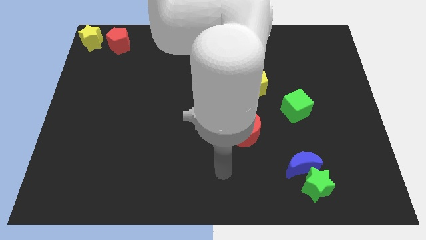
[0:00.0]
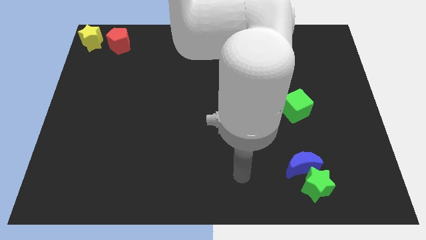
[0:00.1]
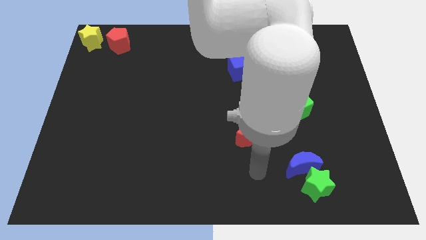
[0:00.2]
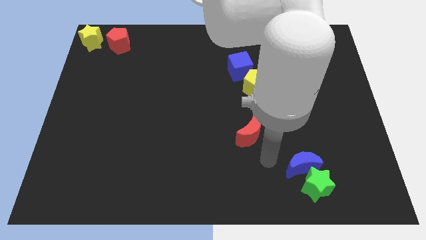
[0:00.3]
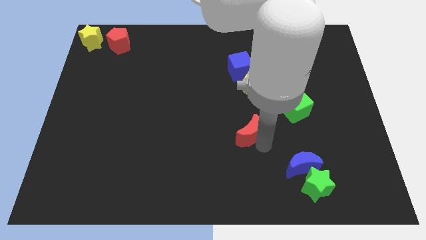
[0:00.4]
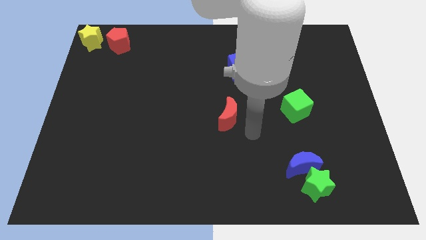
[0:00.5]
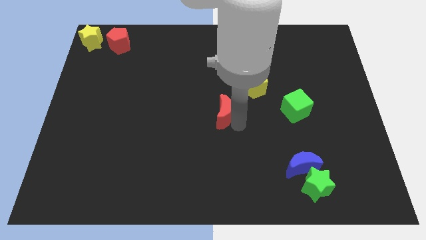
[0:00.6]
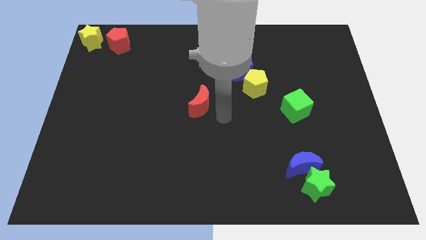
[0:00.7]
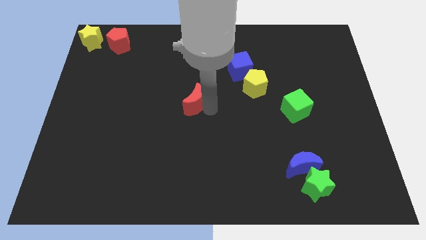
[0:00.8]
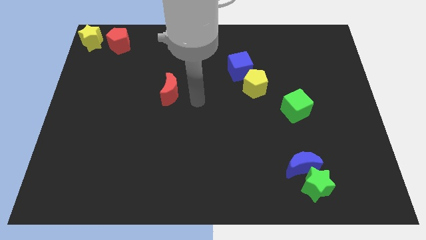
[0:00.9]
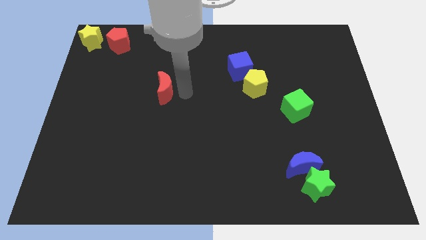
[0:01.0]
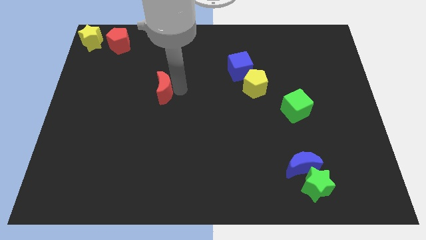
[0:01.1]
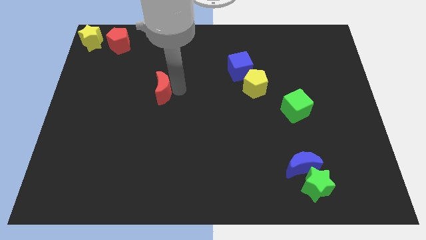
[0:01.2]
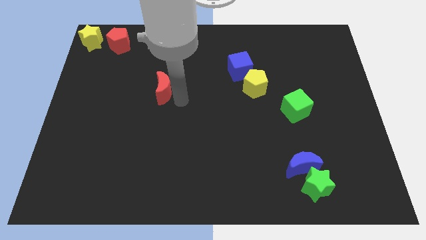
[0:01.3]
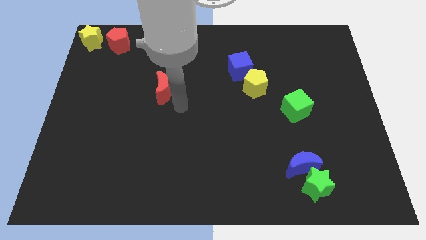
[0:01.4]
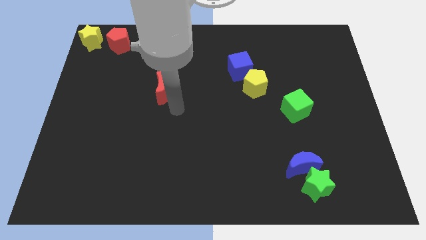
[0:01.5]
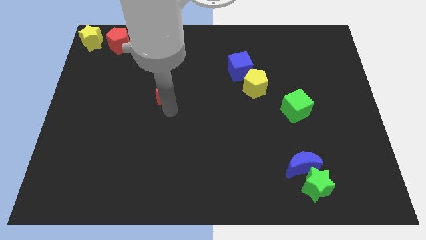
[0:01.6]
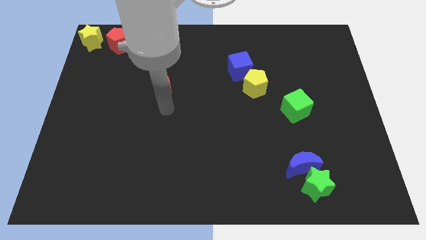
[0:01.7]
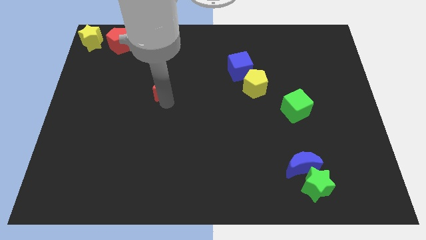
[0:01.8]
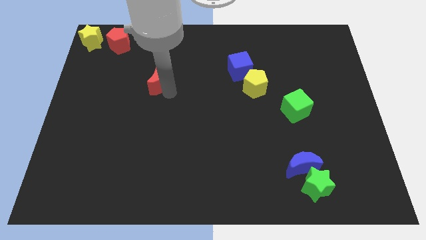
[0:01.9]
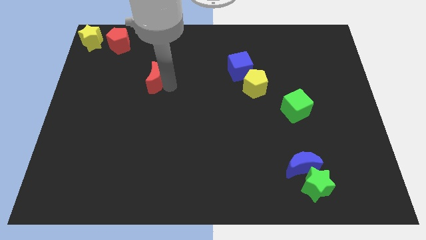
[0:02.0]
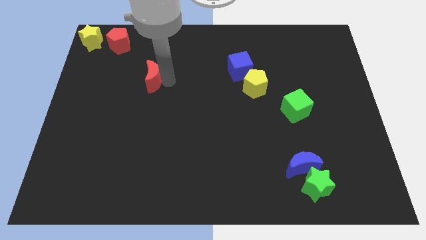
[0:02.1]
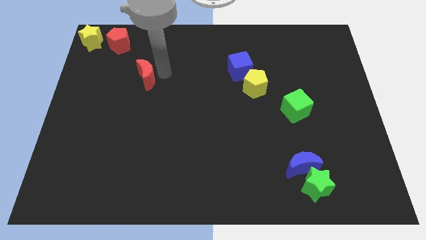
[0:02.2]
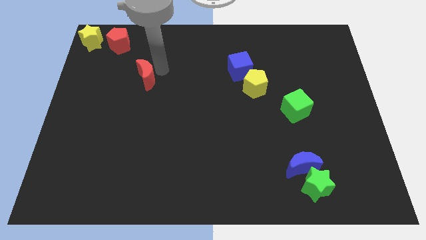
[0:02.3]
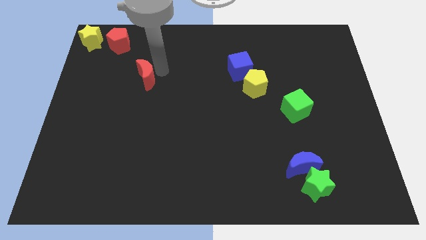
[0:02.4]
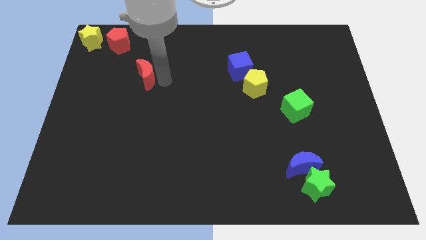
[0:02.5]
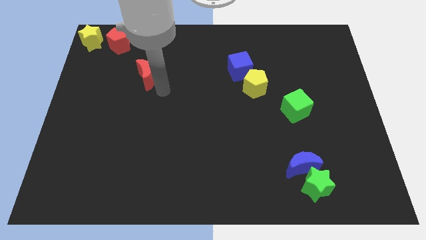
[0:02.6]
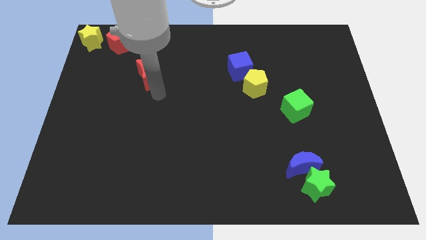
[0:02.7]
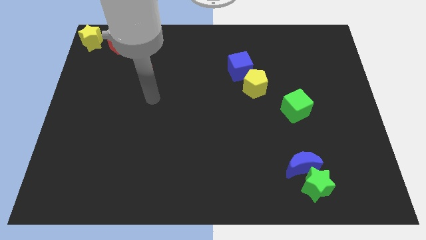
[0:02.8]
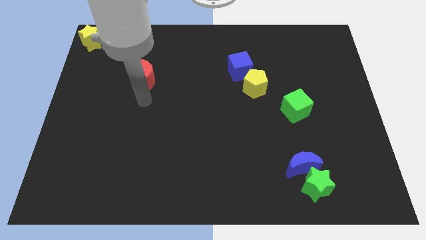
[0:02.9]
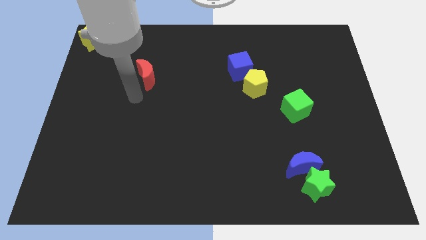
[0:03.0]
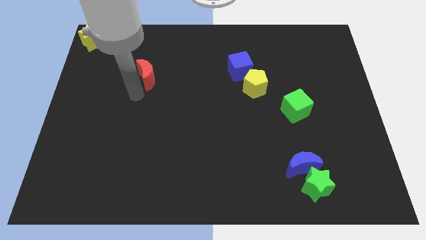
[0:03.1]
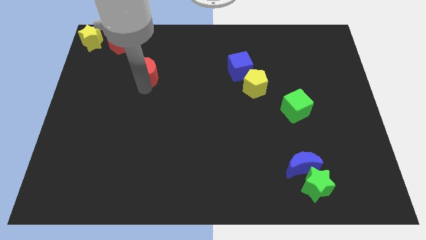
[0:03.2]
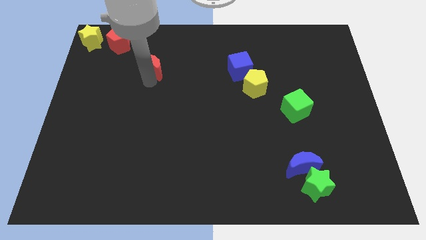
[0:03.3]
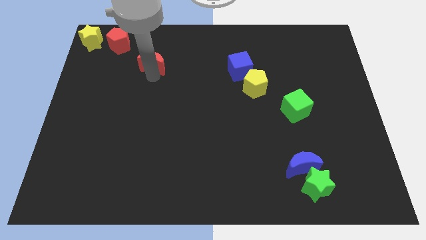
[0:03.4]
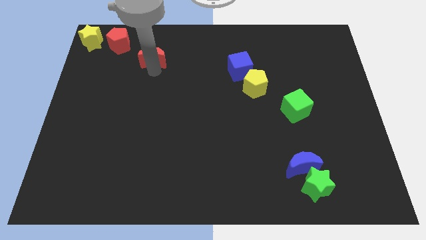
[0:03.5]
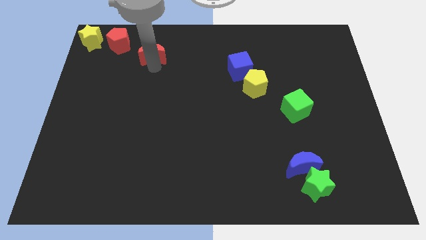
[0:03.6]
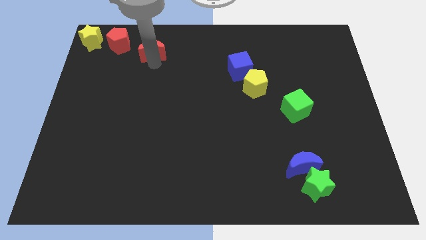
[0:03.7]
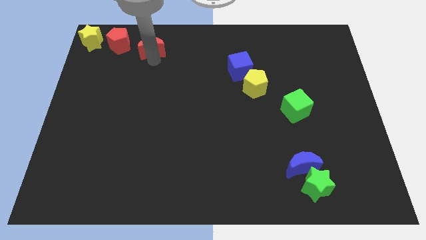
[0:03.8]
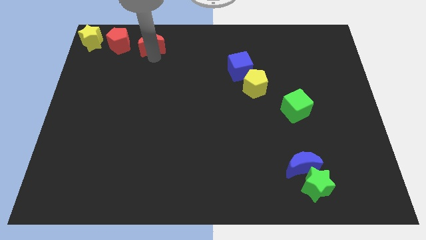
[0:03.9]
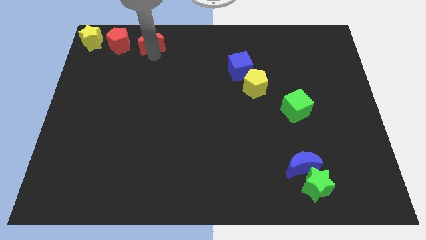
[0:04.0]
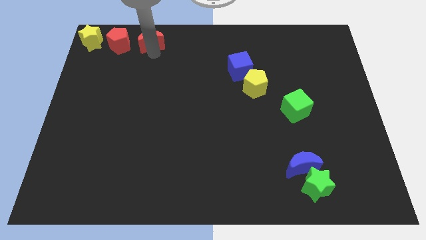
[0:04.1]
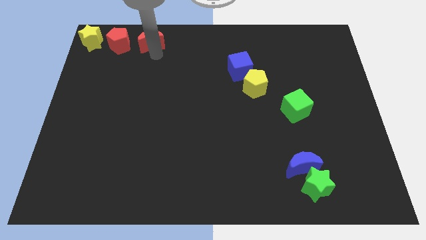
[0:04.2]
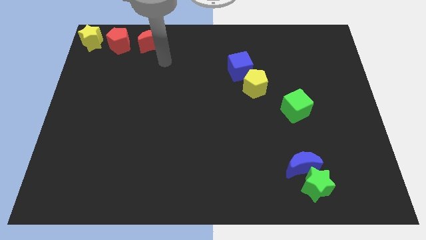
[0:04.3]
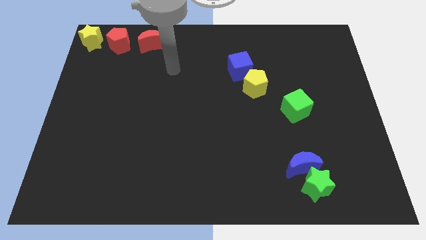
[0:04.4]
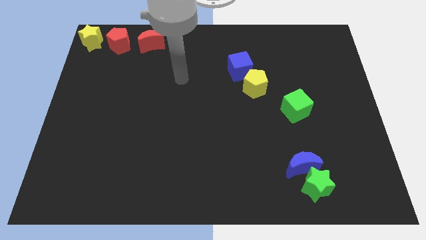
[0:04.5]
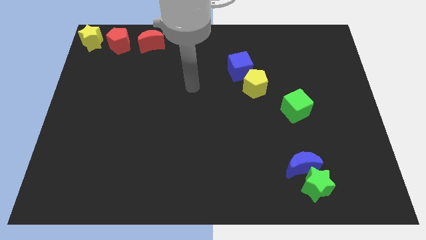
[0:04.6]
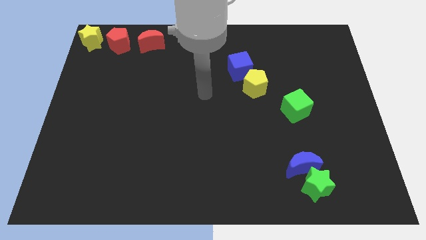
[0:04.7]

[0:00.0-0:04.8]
push the red moon to the right of red pentagon

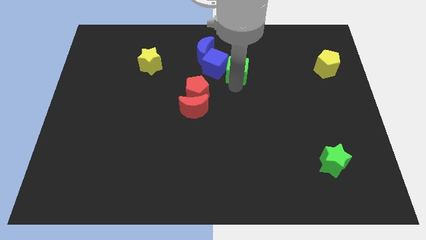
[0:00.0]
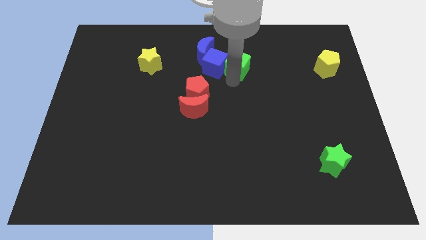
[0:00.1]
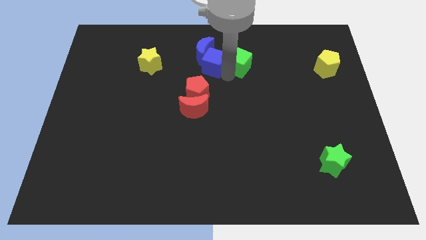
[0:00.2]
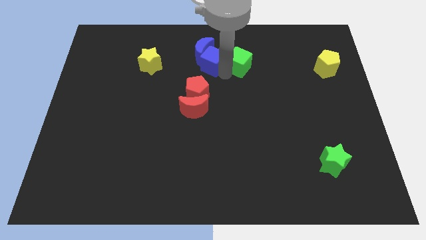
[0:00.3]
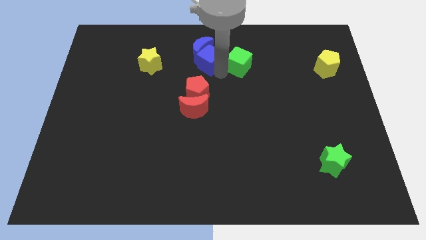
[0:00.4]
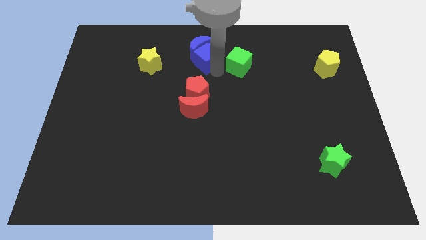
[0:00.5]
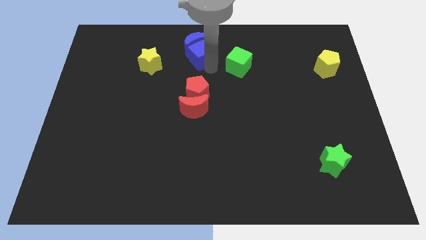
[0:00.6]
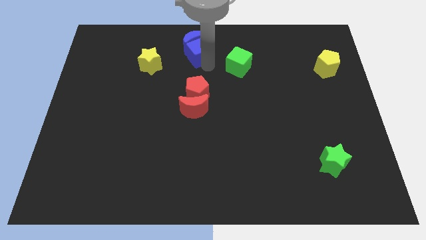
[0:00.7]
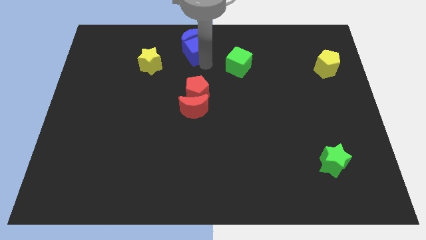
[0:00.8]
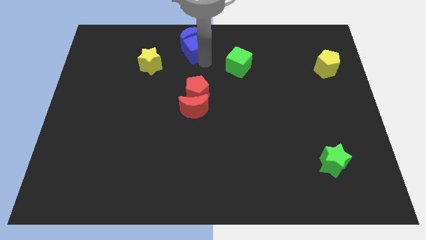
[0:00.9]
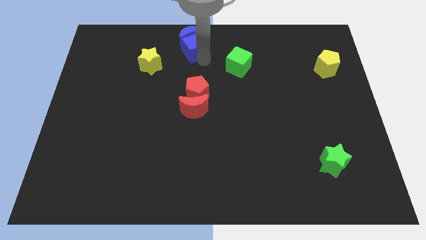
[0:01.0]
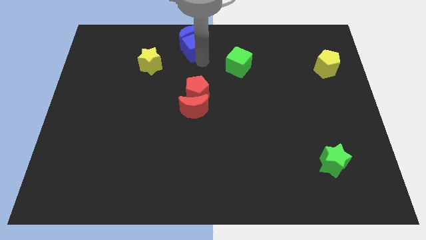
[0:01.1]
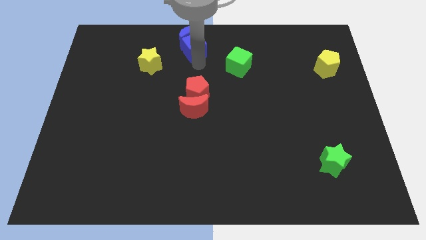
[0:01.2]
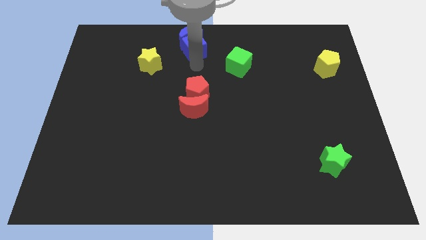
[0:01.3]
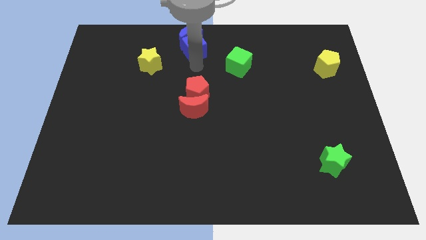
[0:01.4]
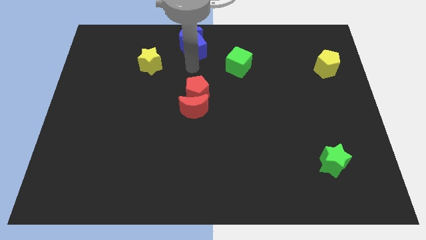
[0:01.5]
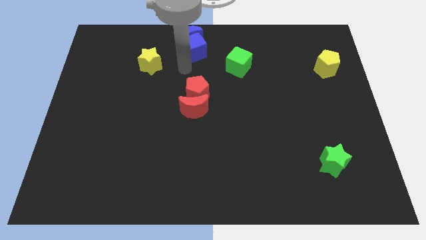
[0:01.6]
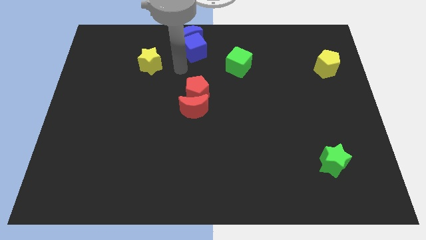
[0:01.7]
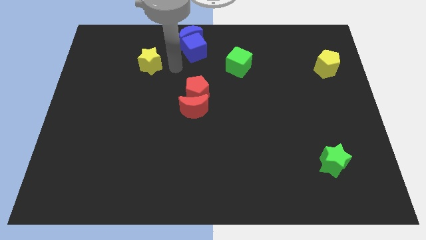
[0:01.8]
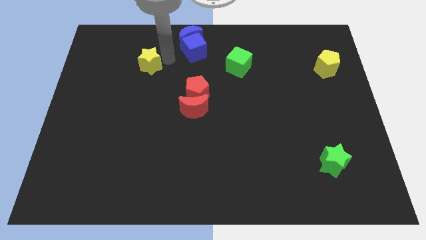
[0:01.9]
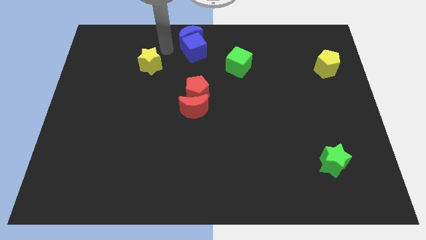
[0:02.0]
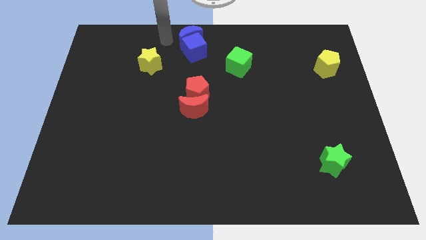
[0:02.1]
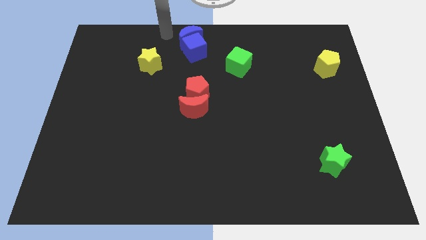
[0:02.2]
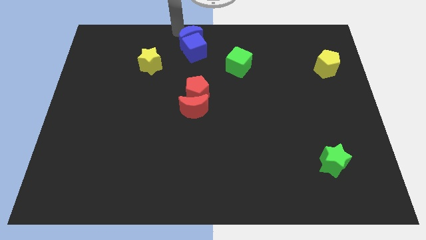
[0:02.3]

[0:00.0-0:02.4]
separate the green cube and blue cube

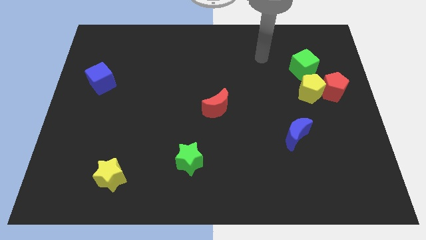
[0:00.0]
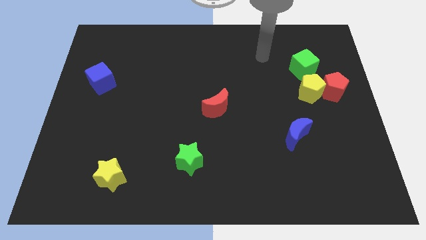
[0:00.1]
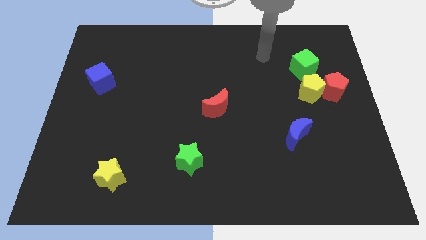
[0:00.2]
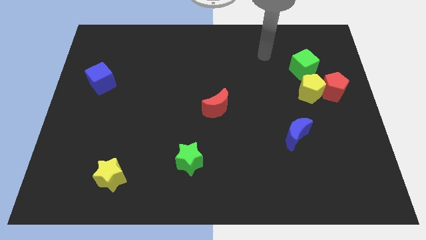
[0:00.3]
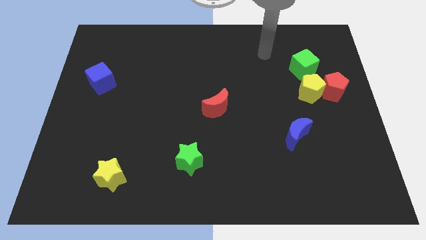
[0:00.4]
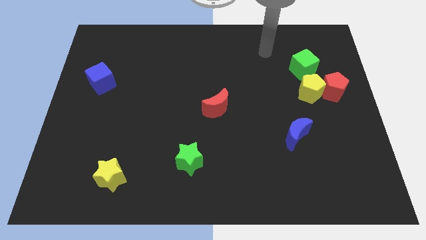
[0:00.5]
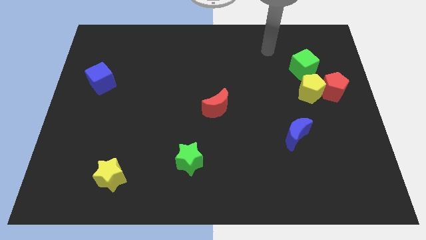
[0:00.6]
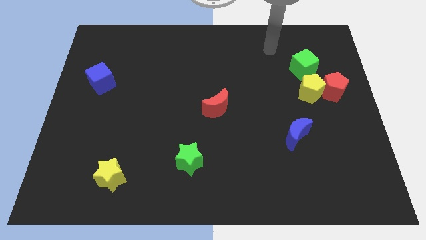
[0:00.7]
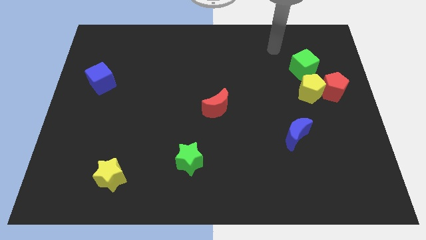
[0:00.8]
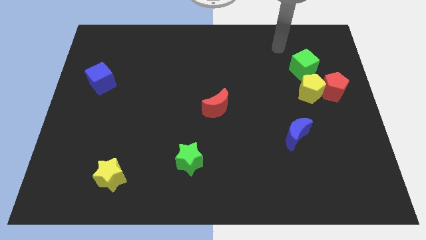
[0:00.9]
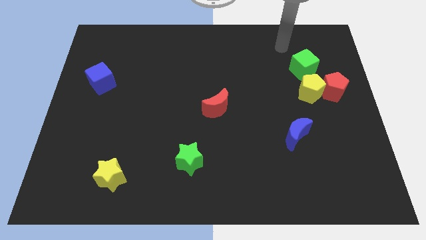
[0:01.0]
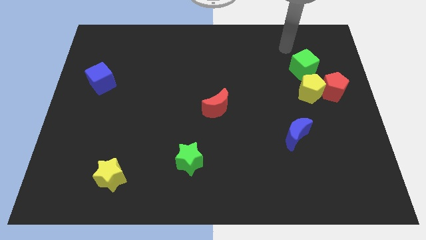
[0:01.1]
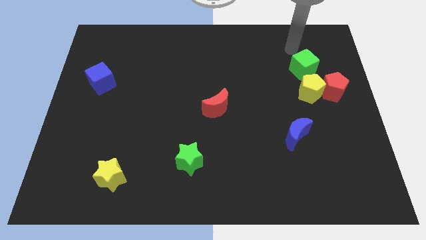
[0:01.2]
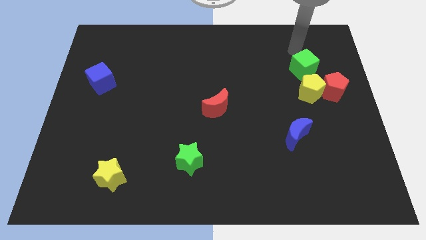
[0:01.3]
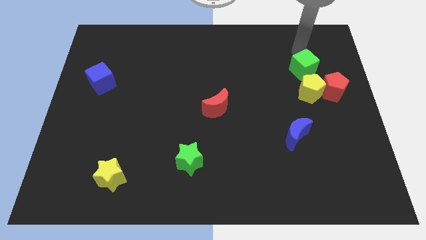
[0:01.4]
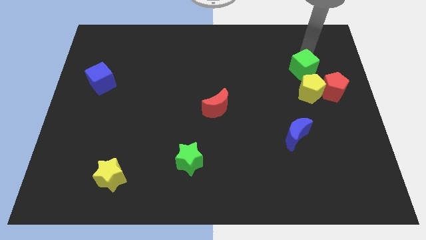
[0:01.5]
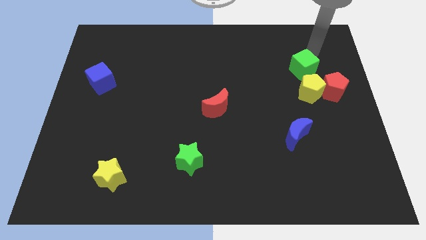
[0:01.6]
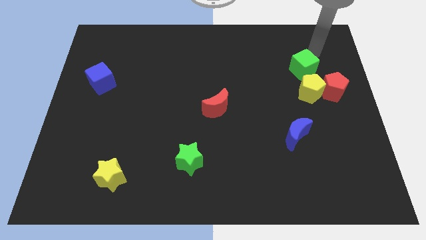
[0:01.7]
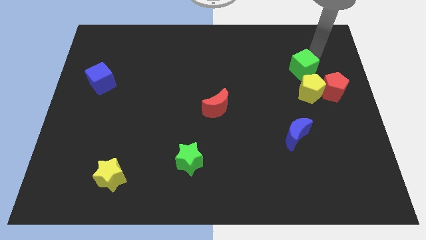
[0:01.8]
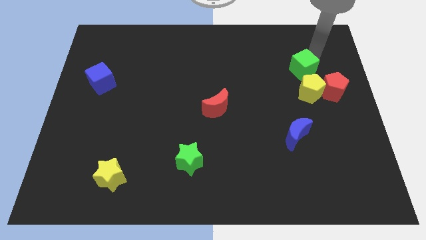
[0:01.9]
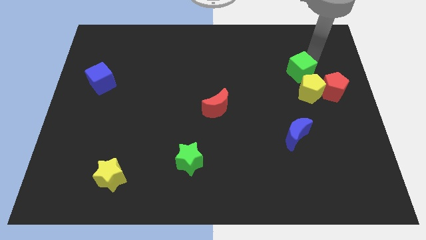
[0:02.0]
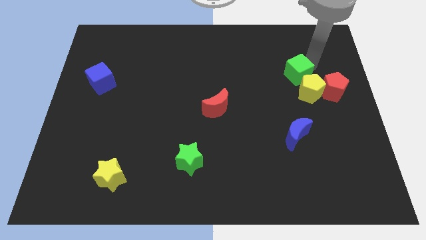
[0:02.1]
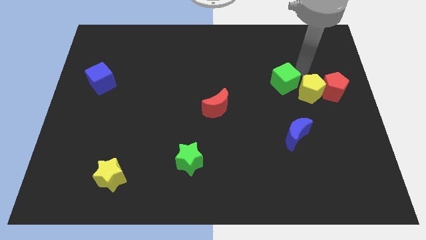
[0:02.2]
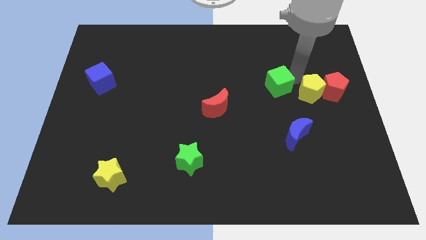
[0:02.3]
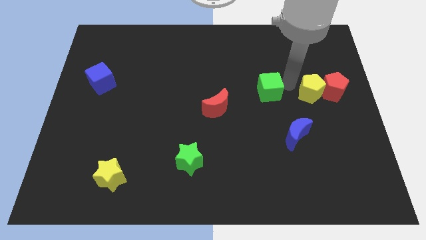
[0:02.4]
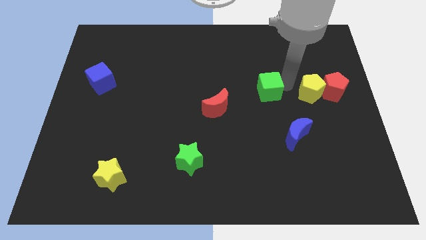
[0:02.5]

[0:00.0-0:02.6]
slide the green cube to the left of the yellow pentagon
